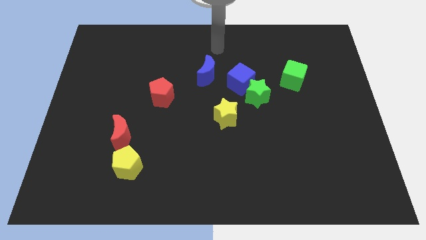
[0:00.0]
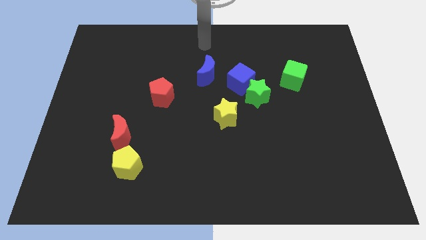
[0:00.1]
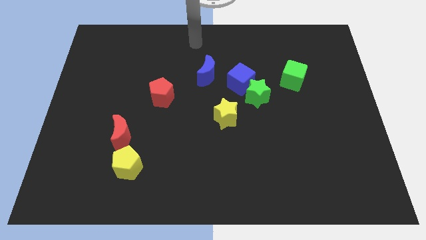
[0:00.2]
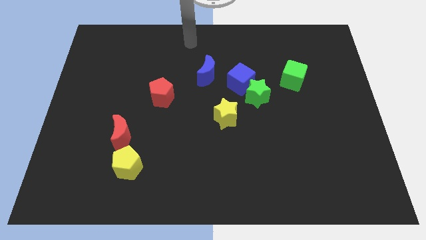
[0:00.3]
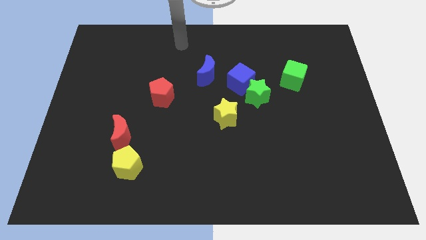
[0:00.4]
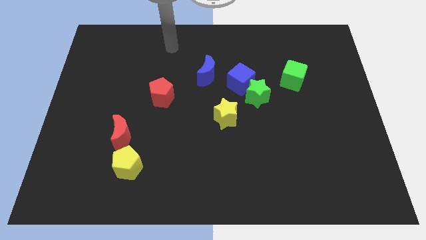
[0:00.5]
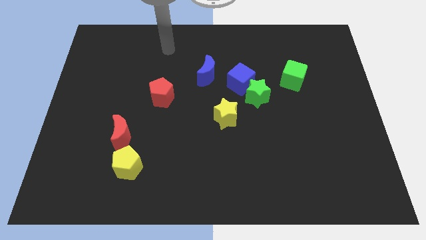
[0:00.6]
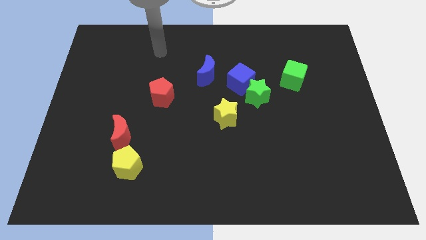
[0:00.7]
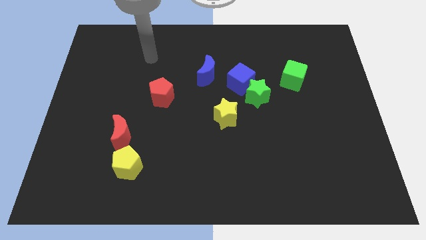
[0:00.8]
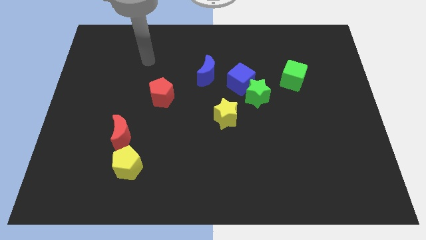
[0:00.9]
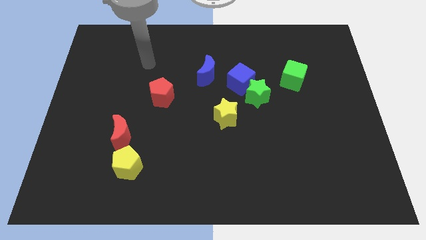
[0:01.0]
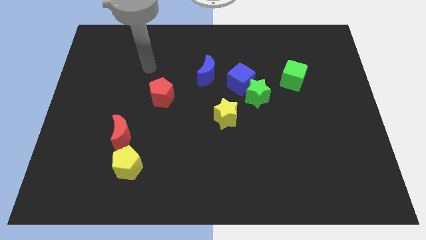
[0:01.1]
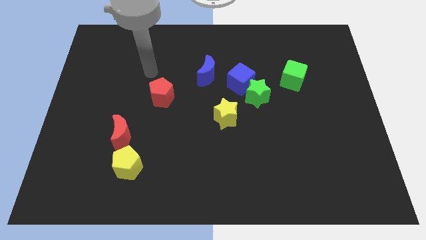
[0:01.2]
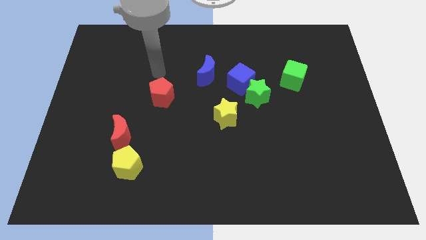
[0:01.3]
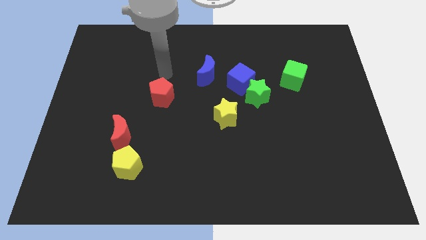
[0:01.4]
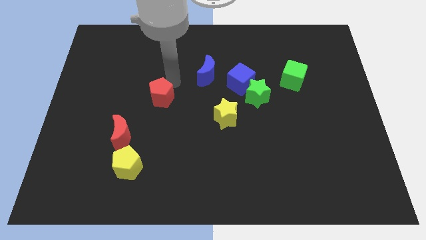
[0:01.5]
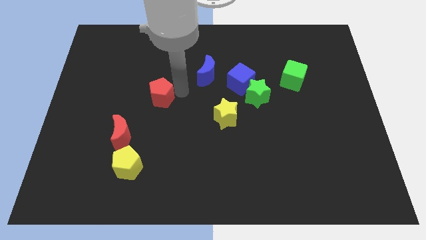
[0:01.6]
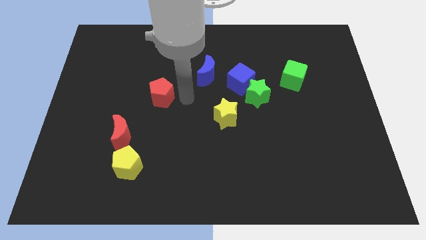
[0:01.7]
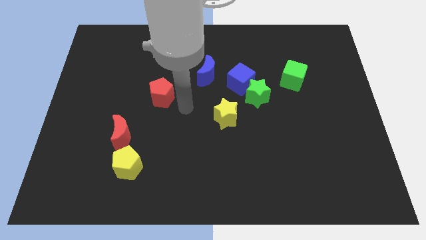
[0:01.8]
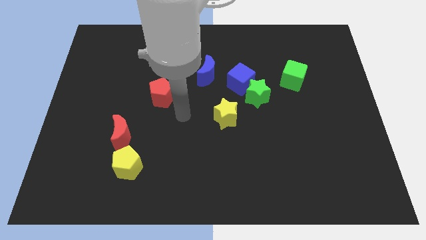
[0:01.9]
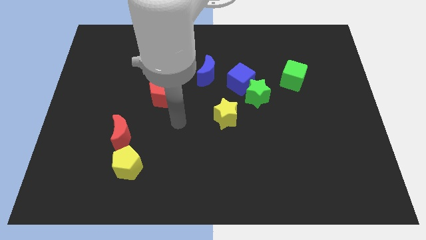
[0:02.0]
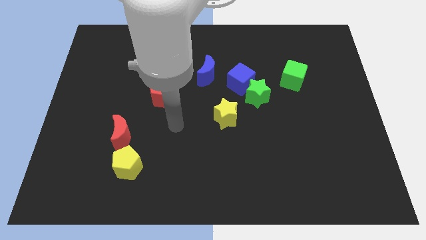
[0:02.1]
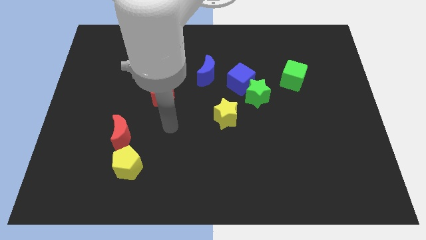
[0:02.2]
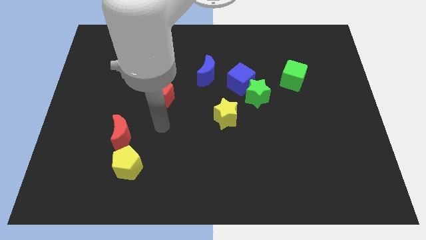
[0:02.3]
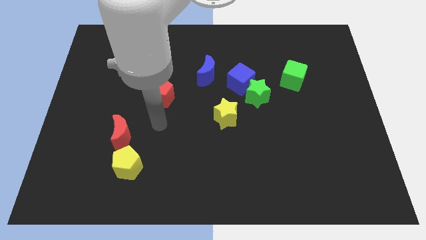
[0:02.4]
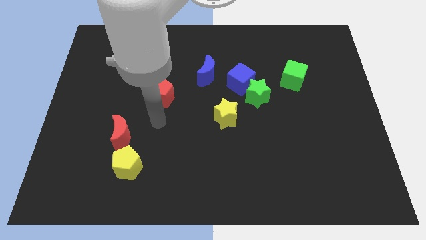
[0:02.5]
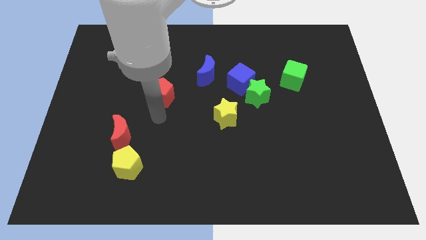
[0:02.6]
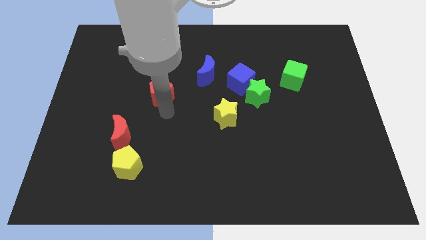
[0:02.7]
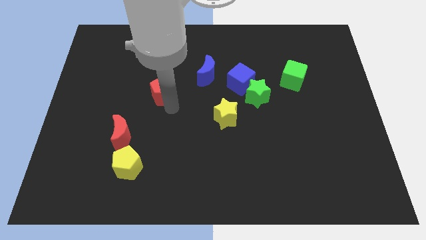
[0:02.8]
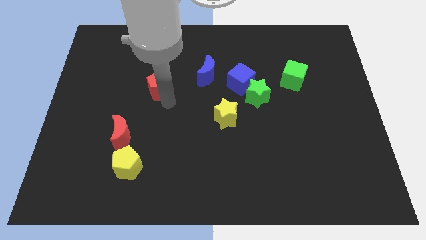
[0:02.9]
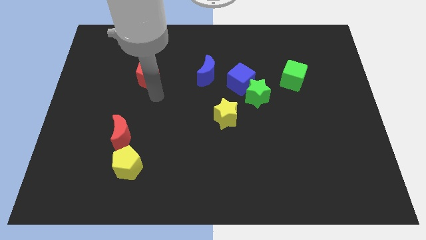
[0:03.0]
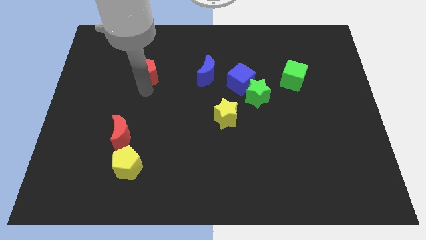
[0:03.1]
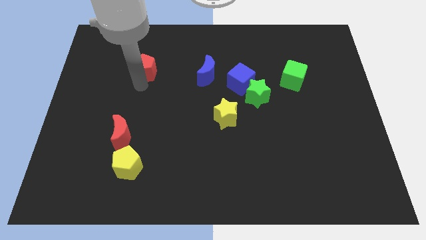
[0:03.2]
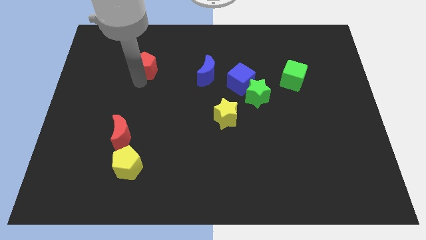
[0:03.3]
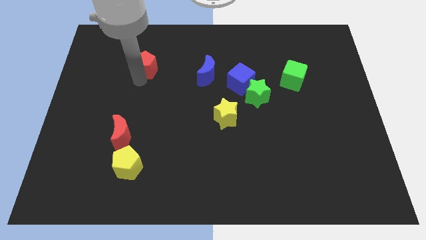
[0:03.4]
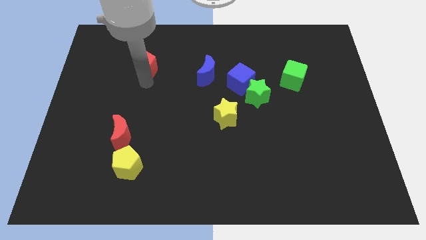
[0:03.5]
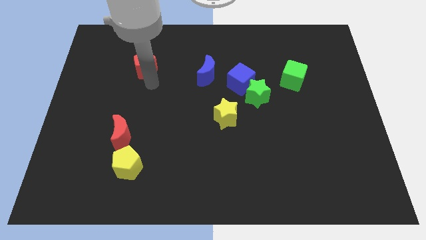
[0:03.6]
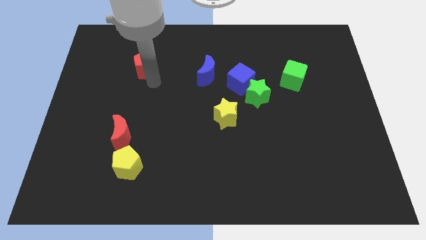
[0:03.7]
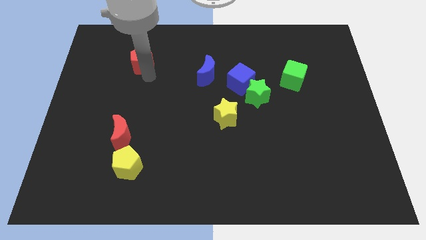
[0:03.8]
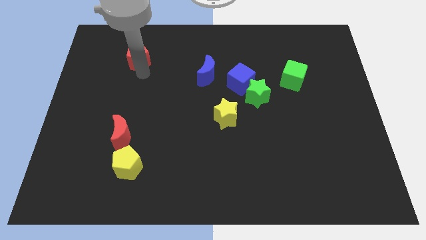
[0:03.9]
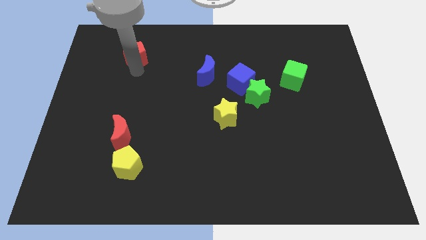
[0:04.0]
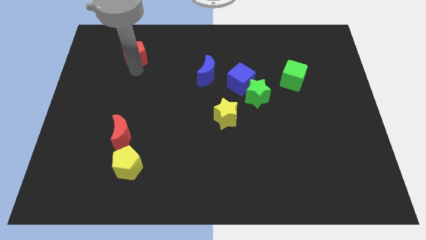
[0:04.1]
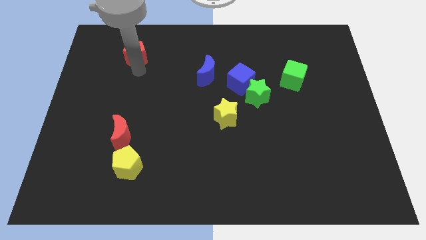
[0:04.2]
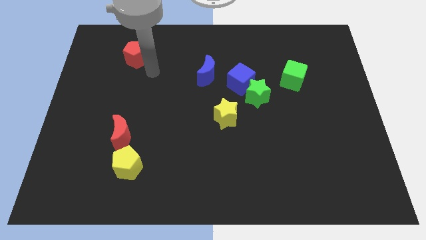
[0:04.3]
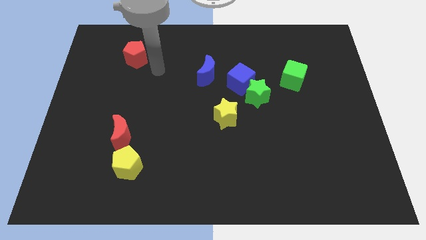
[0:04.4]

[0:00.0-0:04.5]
move the red pentagon to top left

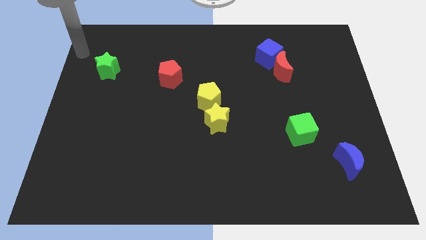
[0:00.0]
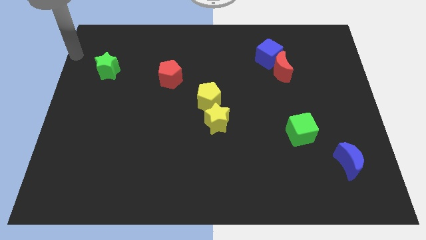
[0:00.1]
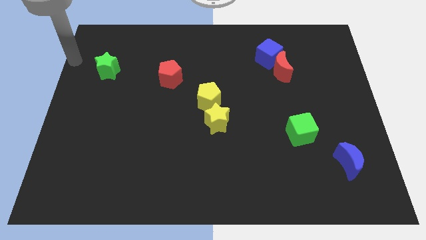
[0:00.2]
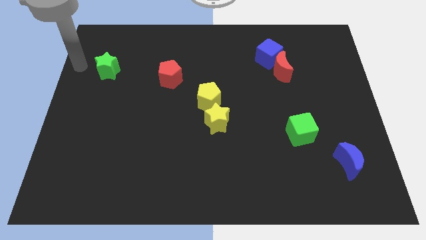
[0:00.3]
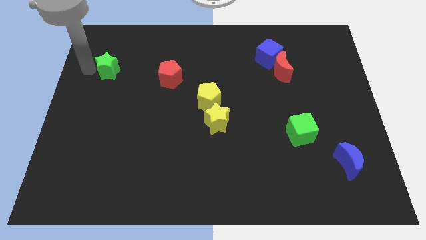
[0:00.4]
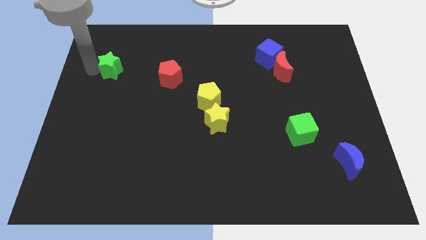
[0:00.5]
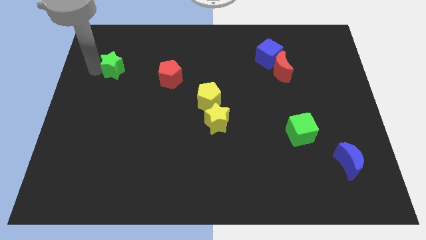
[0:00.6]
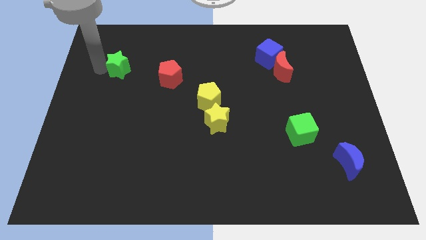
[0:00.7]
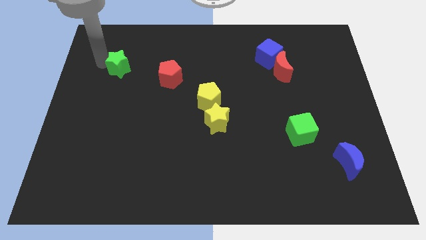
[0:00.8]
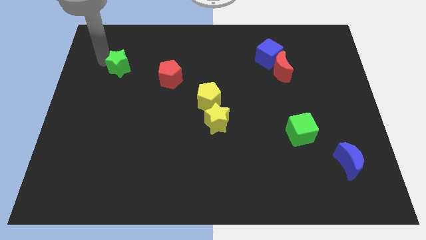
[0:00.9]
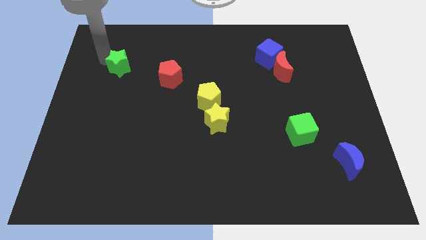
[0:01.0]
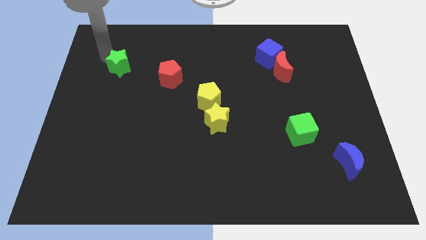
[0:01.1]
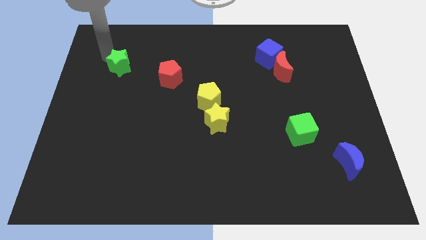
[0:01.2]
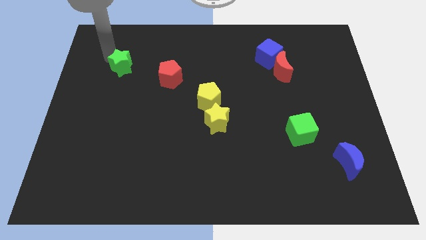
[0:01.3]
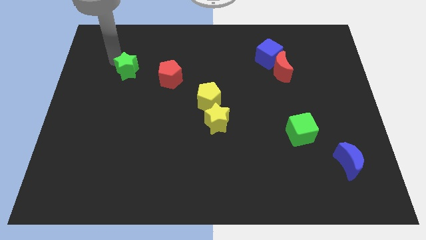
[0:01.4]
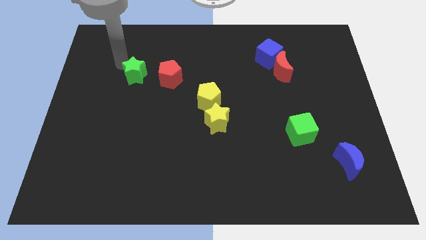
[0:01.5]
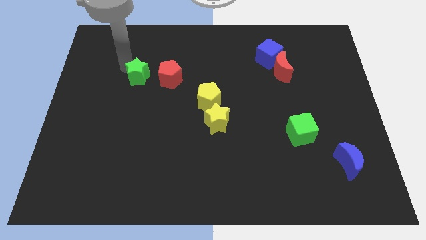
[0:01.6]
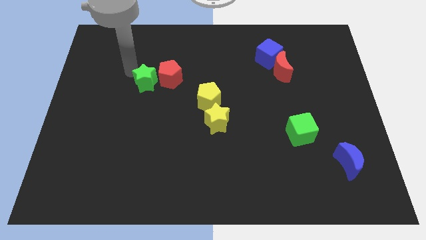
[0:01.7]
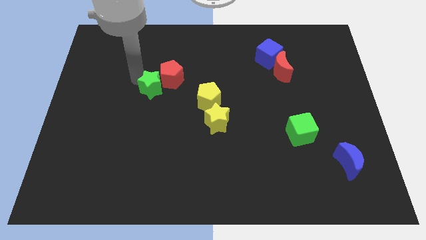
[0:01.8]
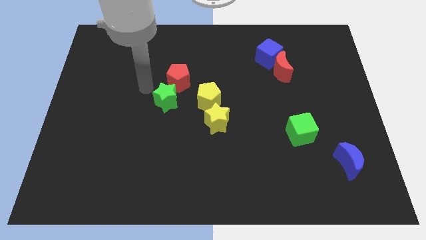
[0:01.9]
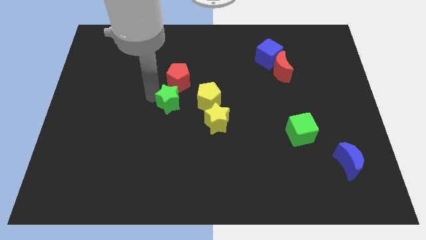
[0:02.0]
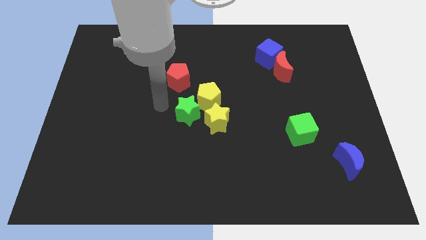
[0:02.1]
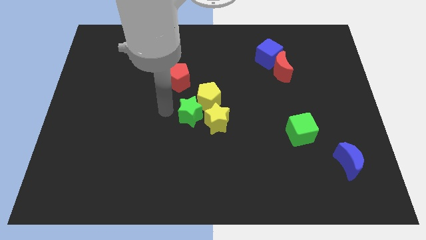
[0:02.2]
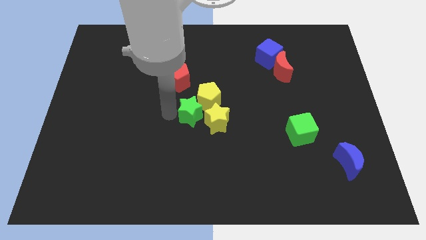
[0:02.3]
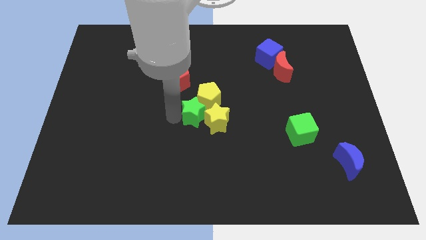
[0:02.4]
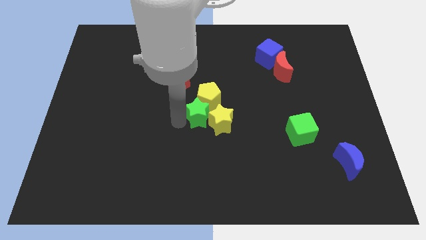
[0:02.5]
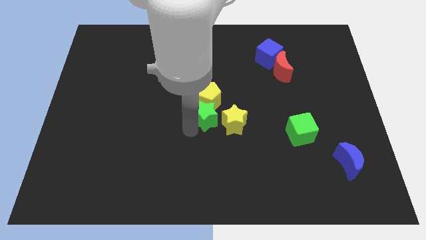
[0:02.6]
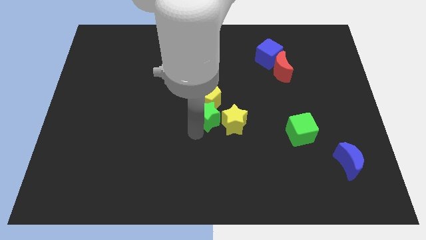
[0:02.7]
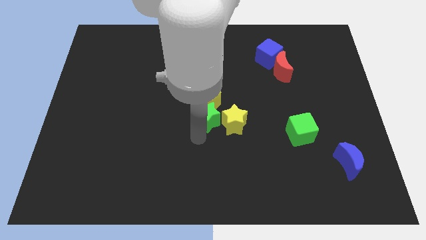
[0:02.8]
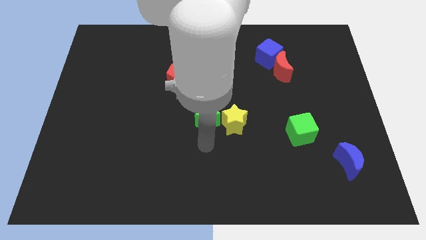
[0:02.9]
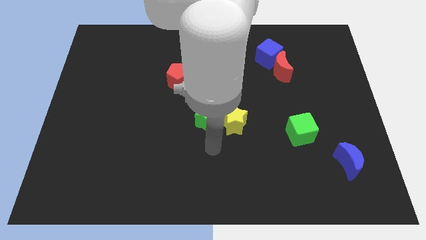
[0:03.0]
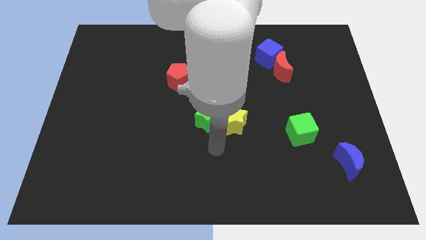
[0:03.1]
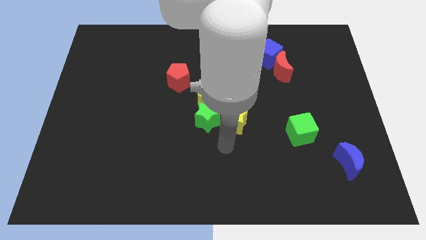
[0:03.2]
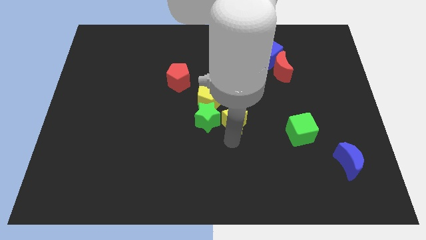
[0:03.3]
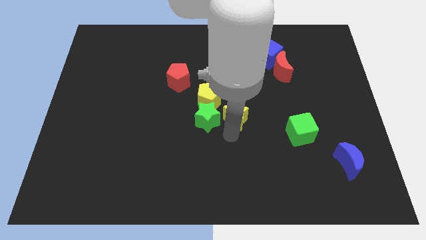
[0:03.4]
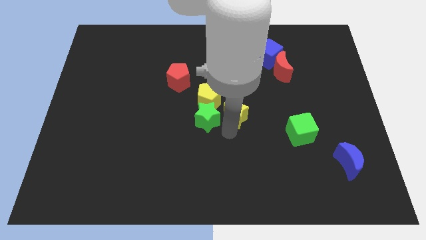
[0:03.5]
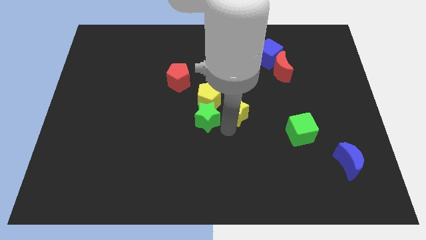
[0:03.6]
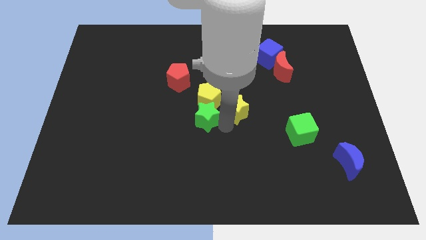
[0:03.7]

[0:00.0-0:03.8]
move the green star below the yellow pentagon

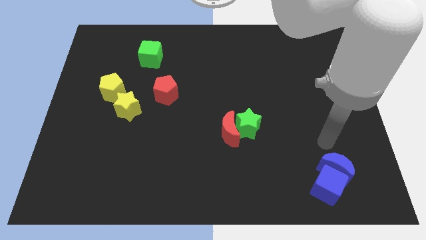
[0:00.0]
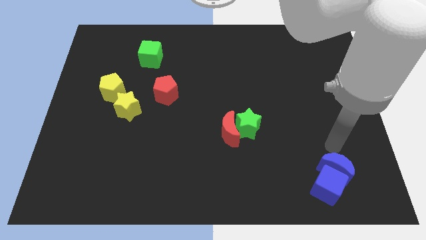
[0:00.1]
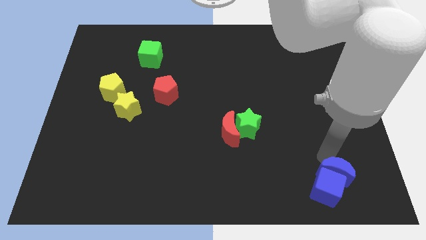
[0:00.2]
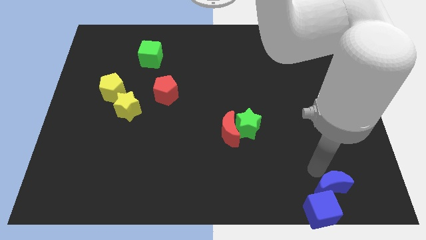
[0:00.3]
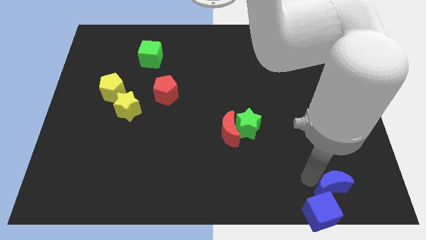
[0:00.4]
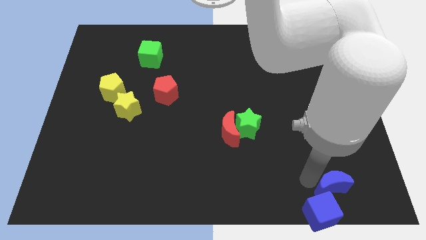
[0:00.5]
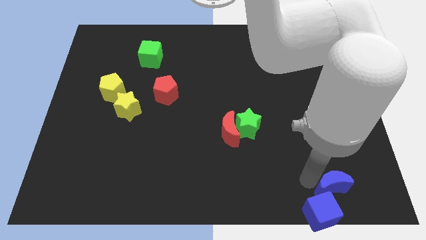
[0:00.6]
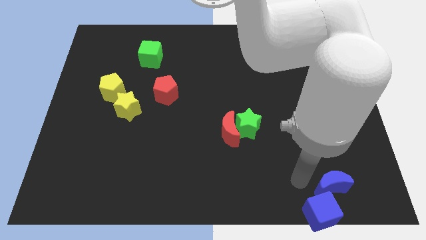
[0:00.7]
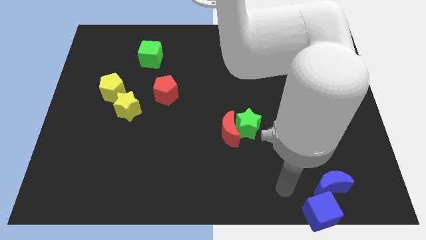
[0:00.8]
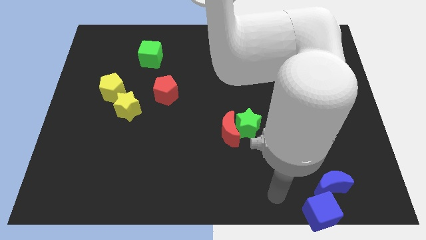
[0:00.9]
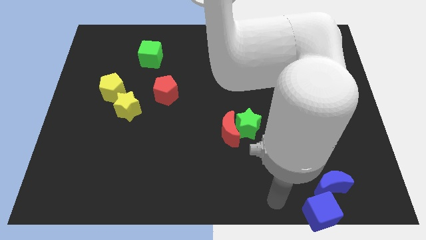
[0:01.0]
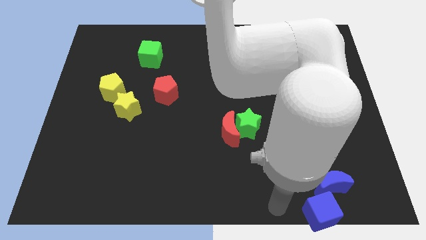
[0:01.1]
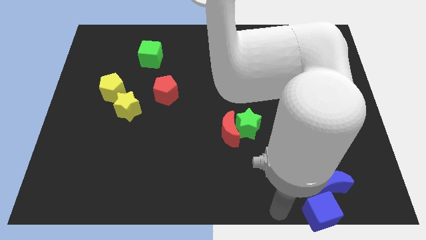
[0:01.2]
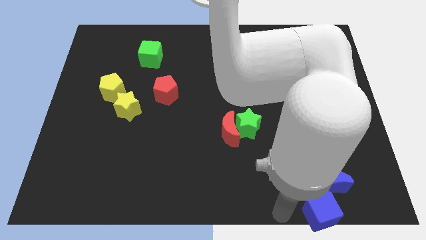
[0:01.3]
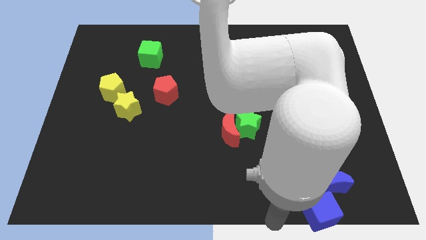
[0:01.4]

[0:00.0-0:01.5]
push blue moon and blue cube to the bottom
